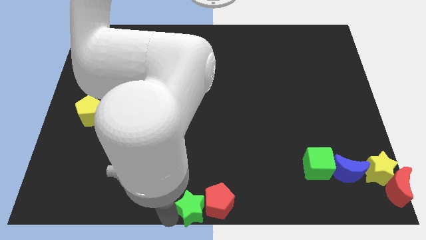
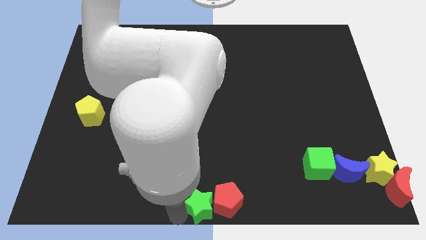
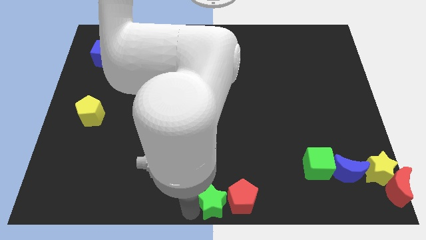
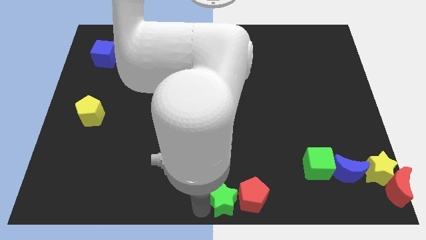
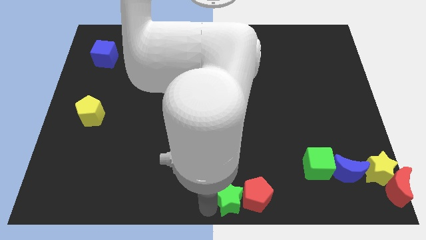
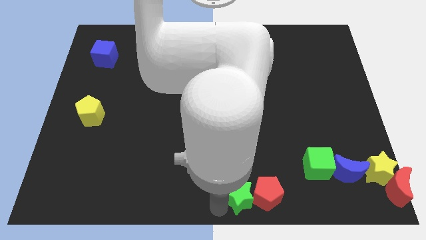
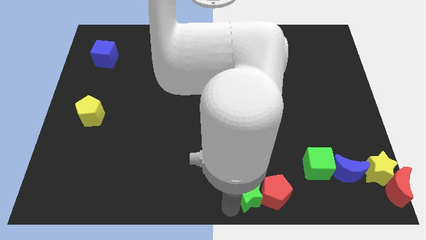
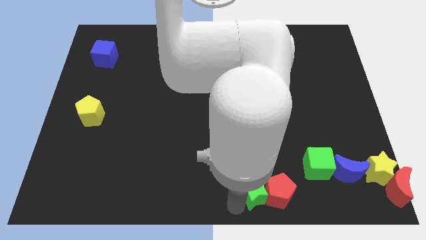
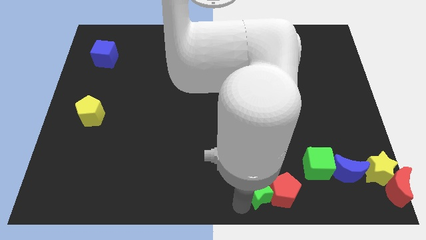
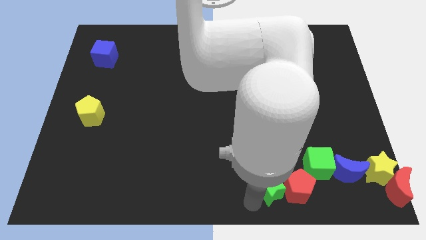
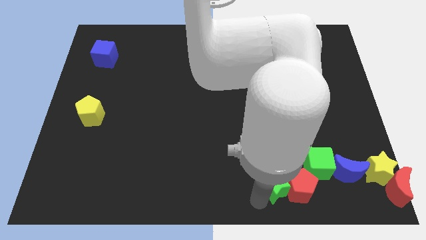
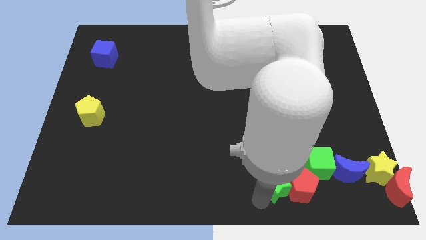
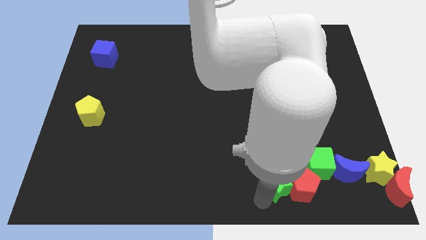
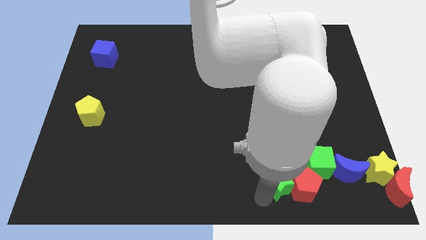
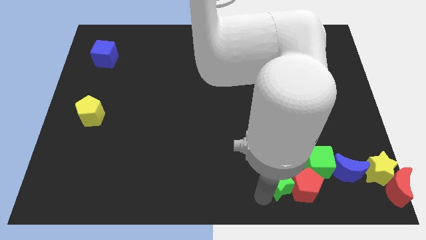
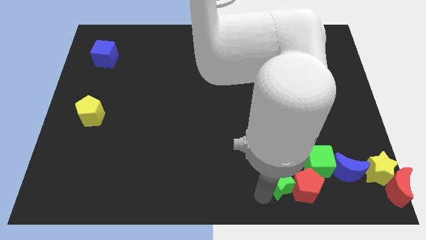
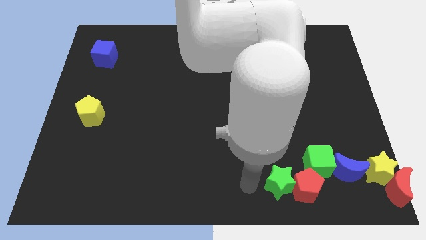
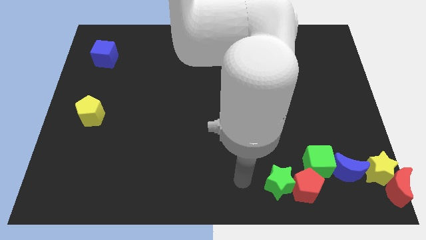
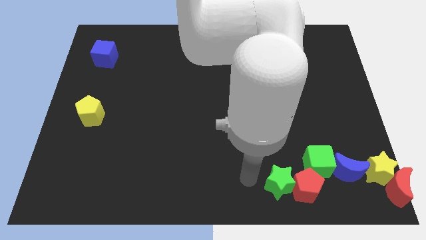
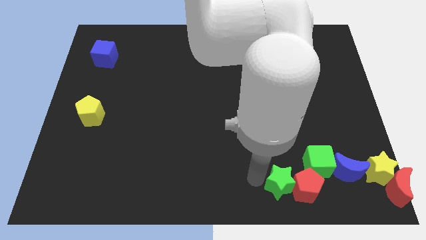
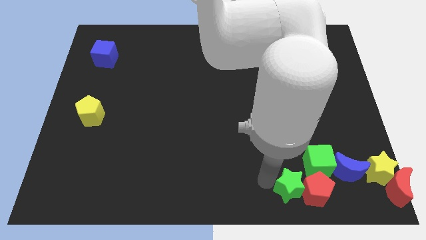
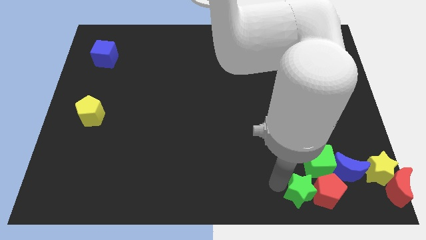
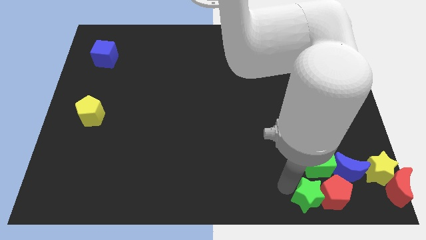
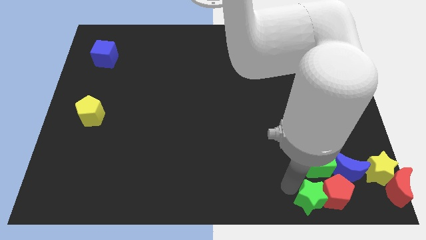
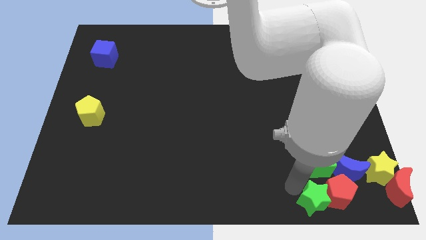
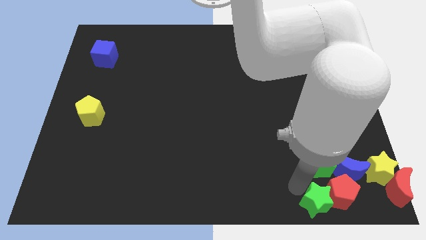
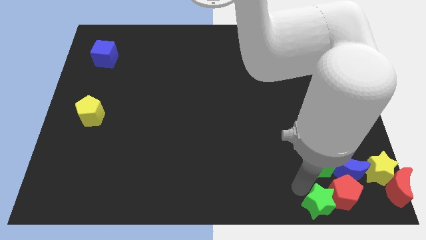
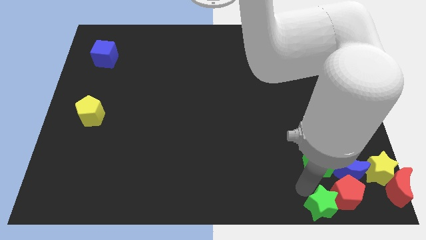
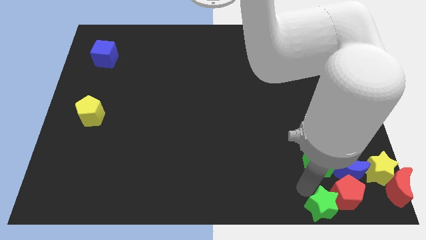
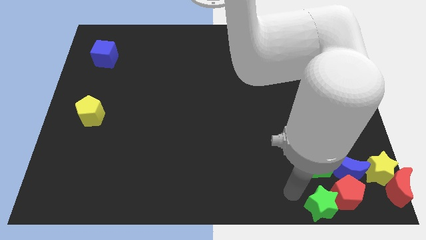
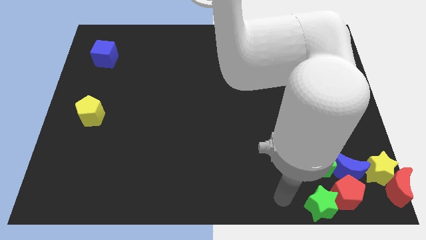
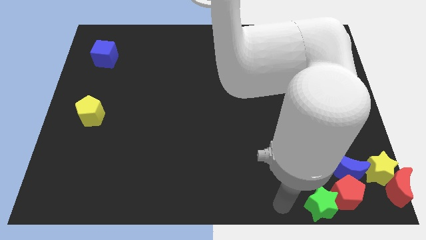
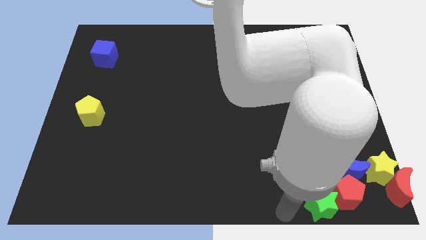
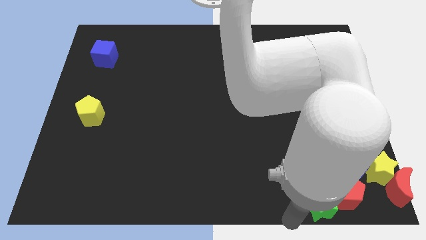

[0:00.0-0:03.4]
place green star to the bottom of green cube

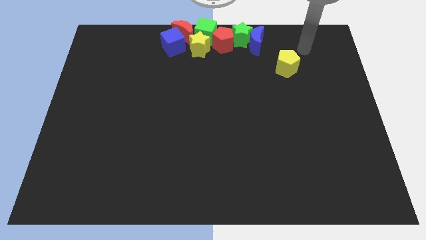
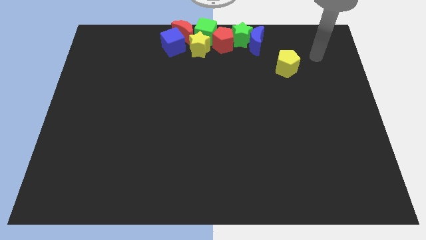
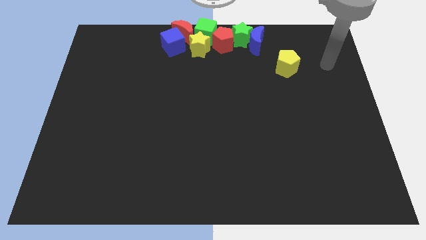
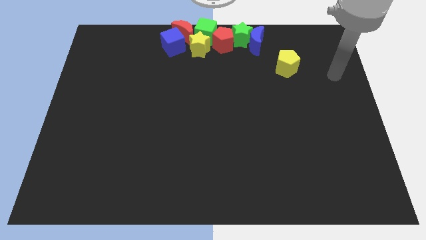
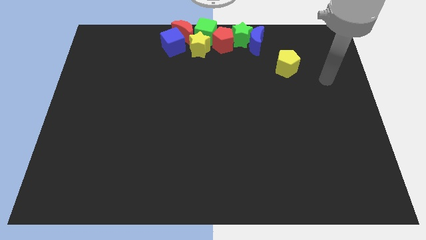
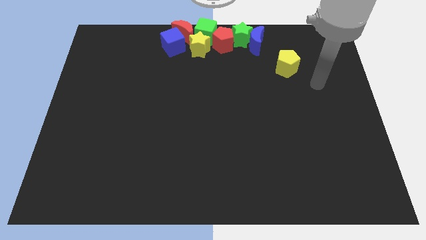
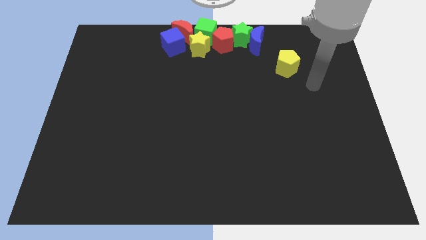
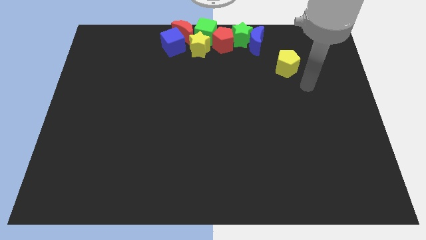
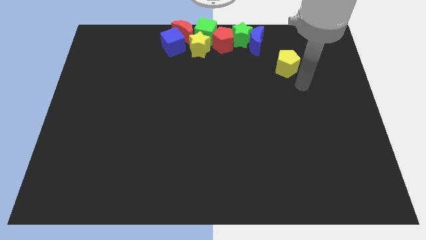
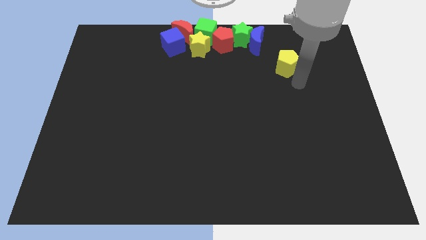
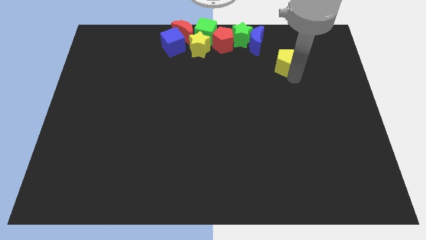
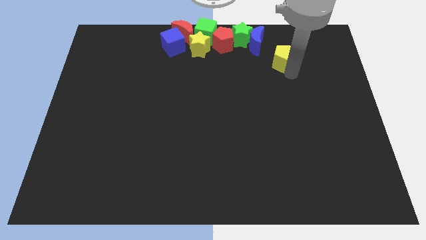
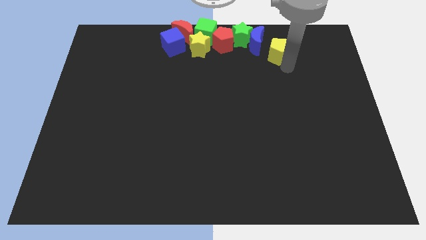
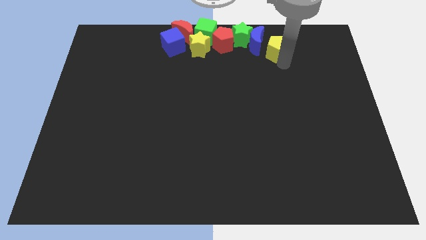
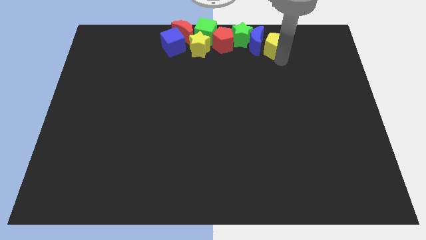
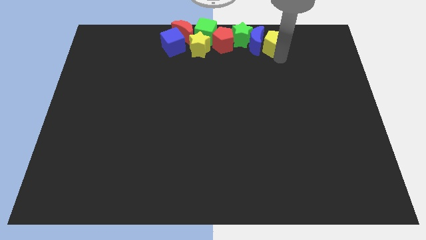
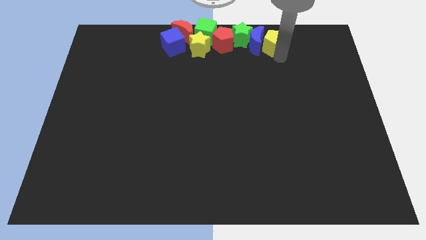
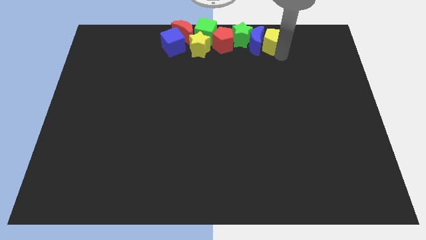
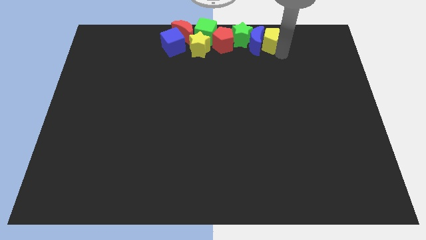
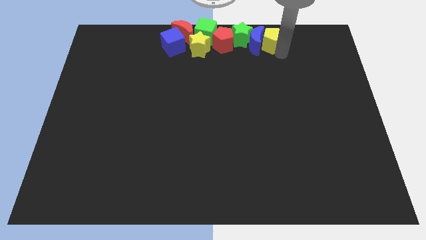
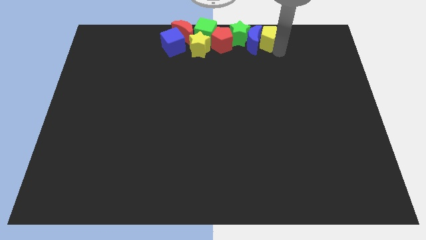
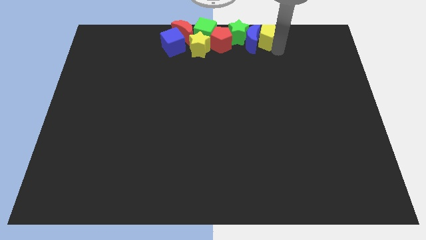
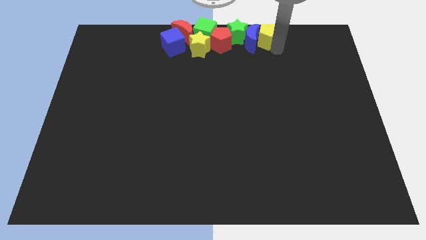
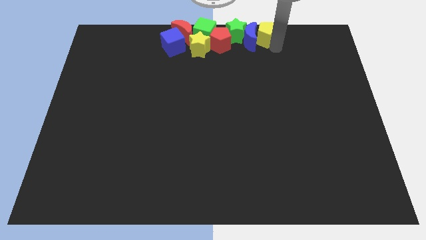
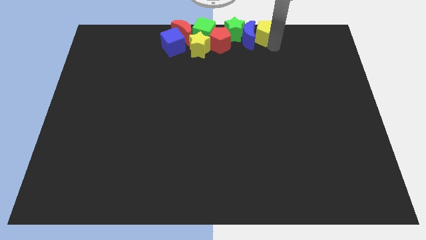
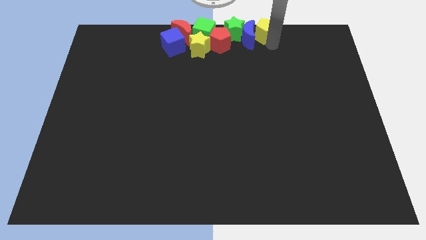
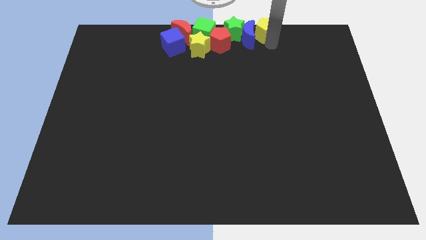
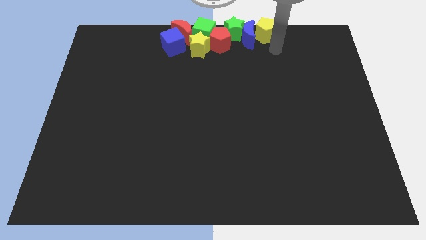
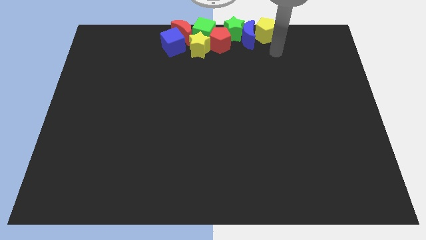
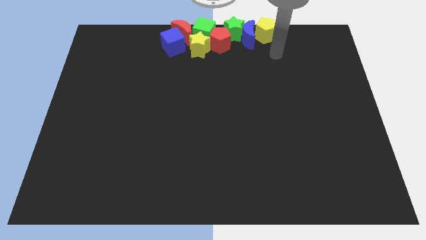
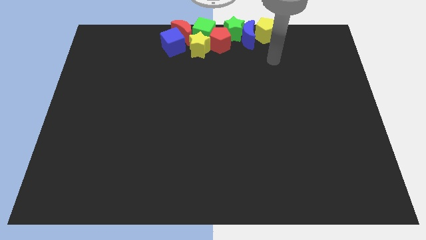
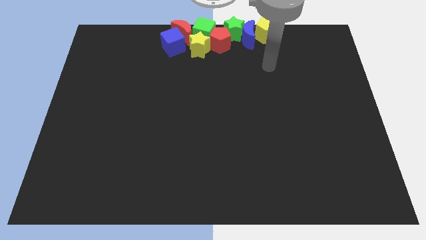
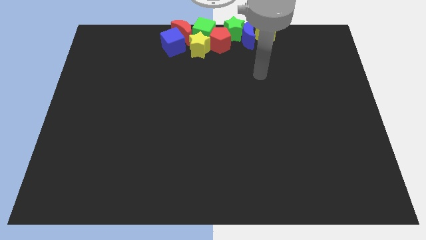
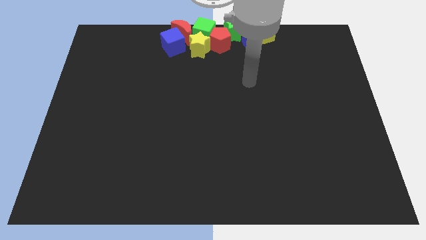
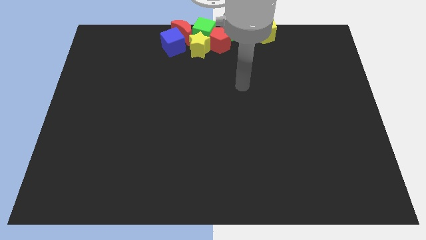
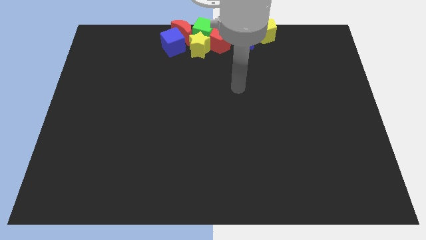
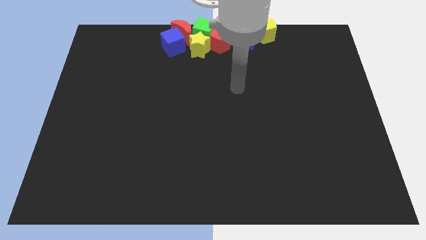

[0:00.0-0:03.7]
push the yellow pentagon to the right side of the blue moon

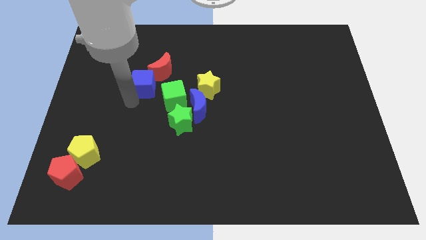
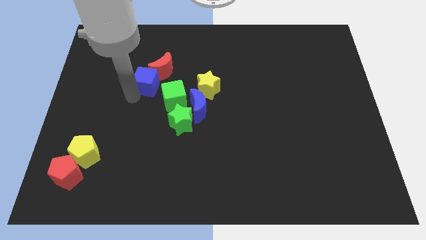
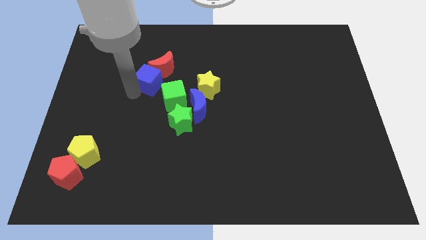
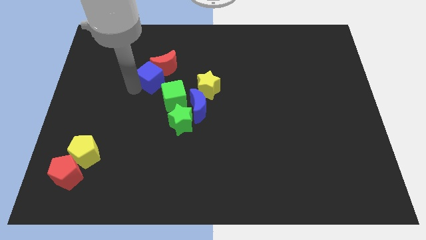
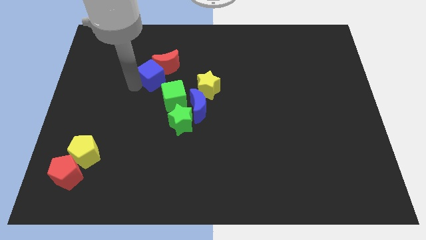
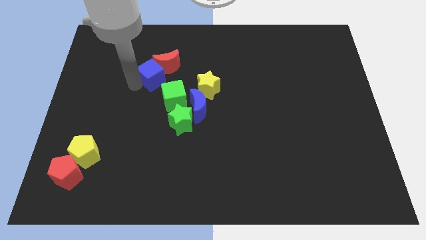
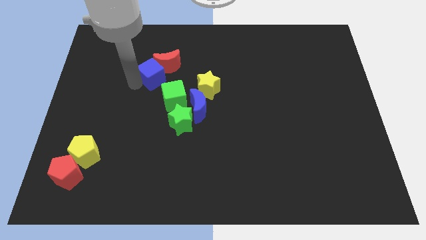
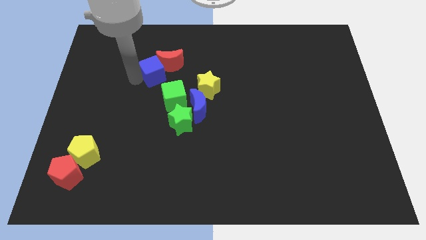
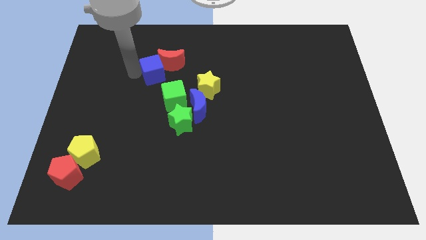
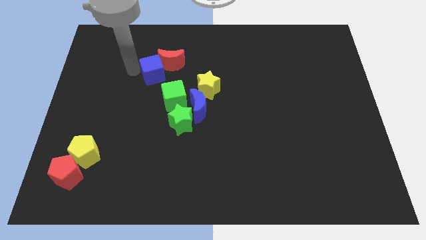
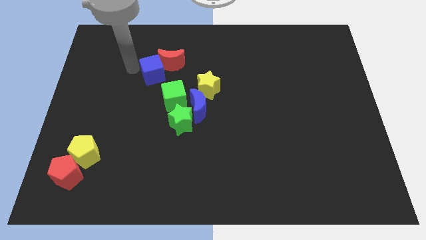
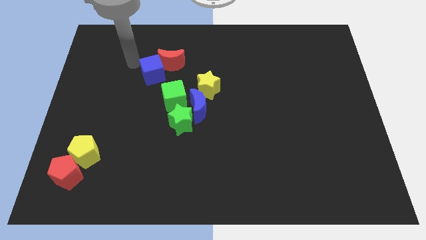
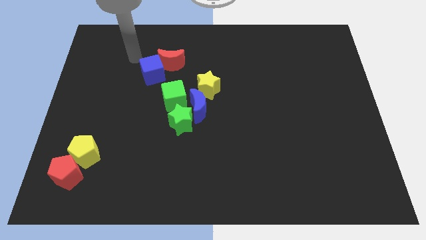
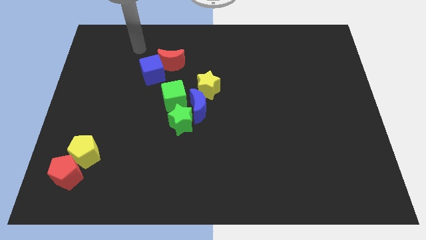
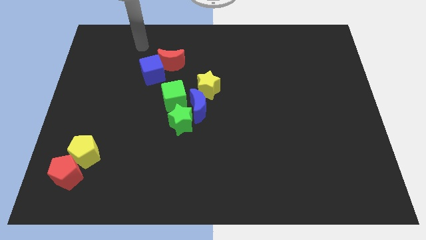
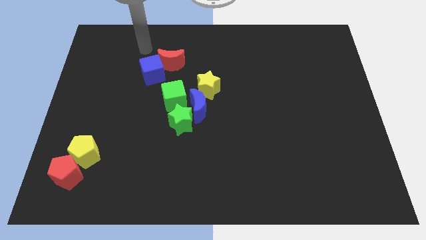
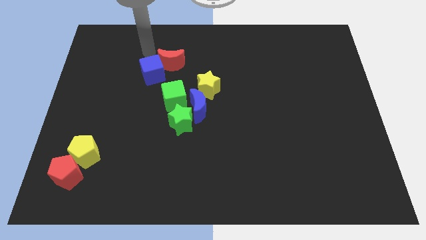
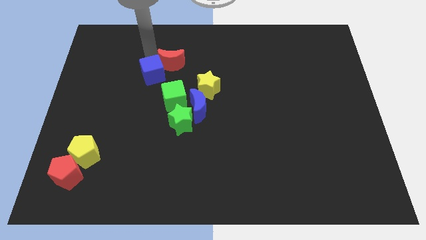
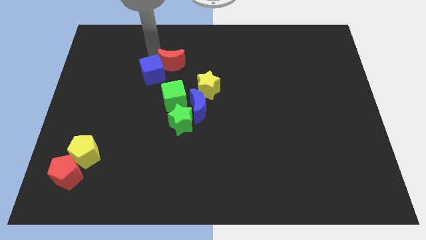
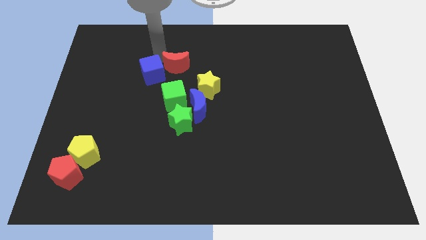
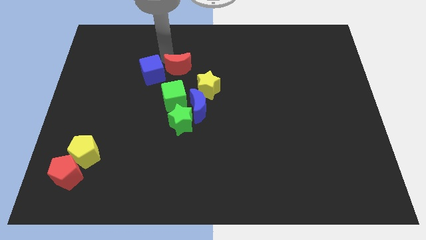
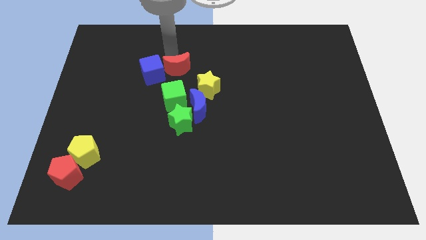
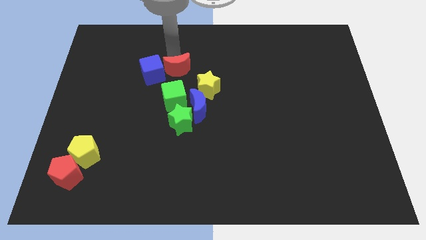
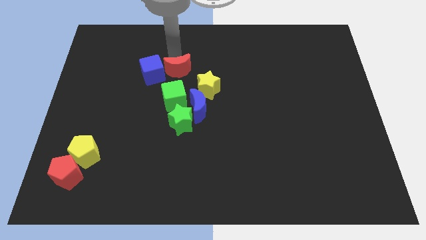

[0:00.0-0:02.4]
put the blue cube into the red moon
